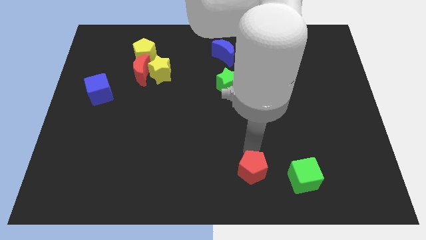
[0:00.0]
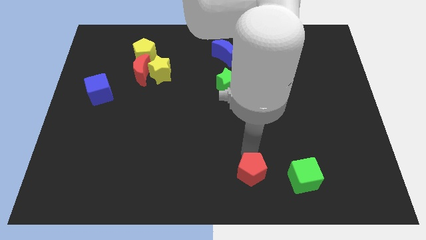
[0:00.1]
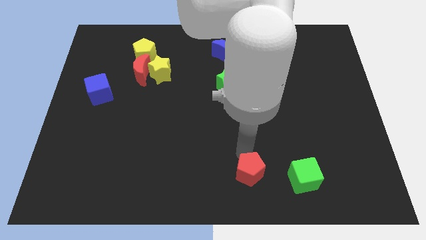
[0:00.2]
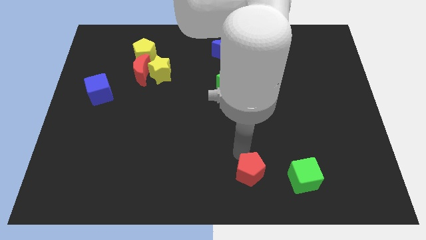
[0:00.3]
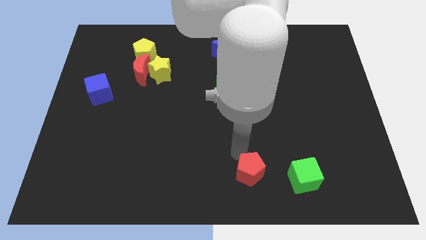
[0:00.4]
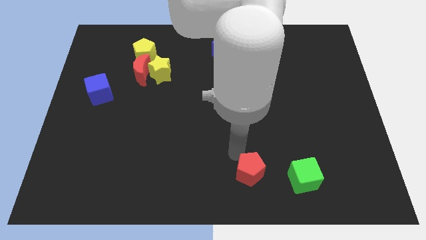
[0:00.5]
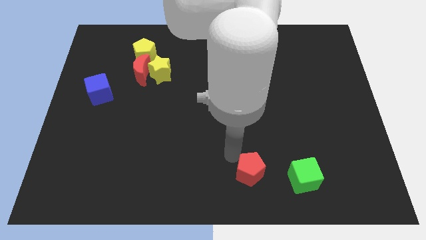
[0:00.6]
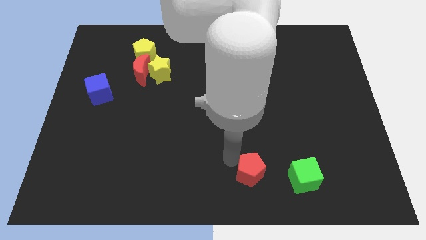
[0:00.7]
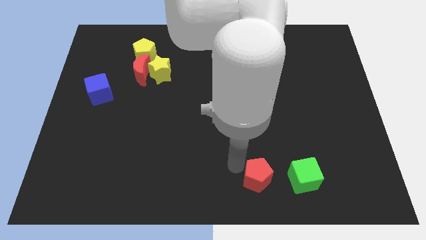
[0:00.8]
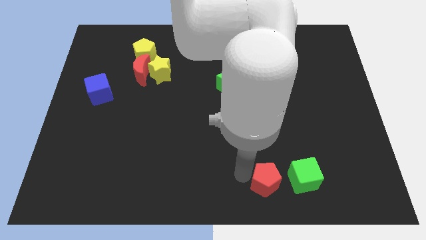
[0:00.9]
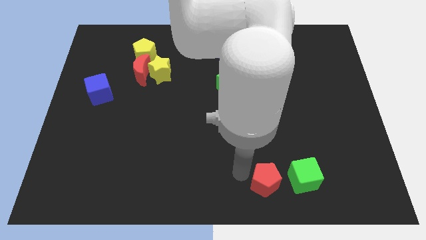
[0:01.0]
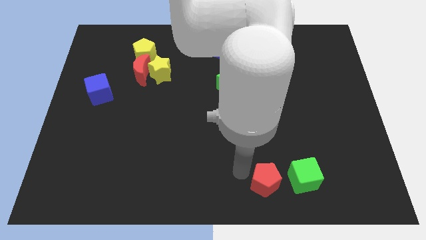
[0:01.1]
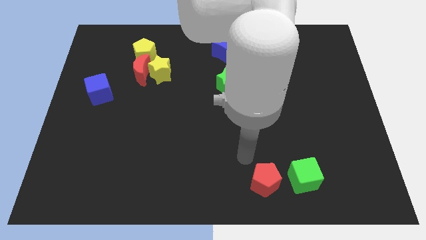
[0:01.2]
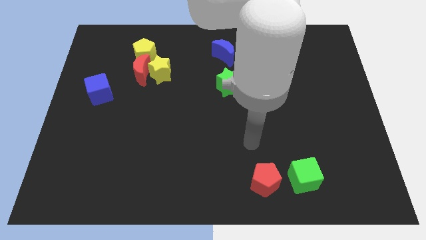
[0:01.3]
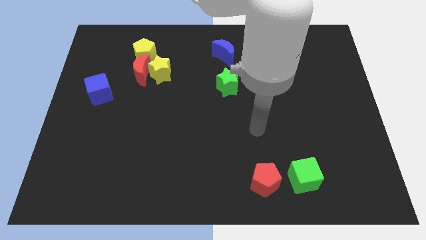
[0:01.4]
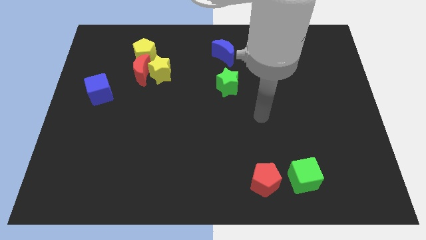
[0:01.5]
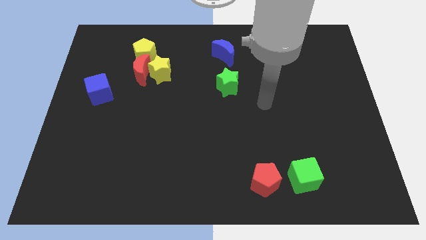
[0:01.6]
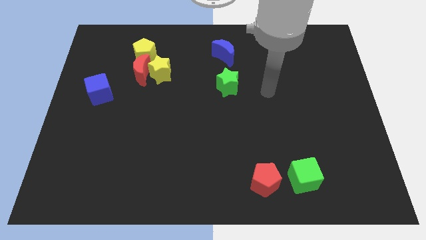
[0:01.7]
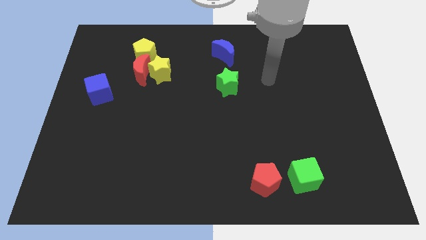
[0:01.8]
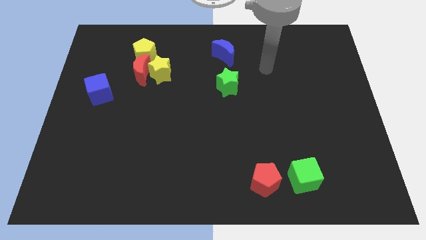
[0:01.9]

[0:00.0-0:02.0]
put the red pentagon left to the green cube

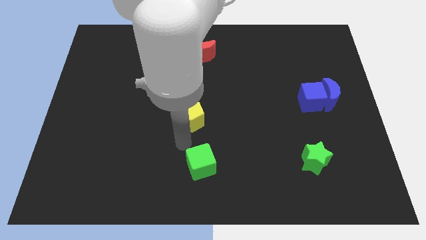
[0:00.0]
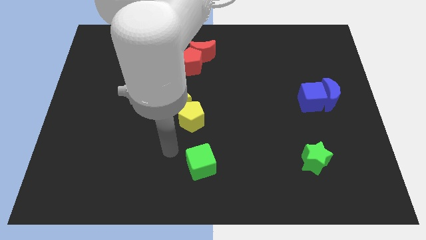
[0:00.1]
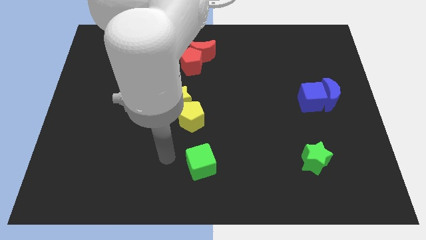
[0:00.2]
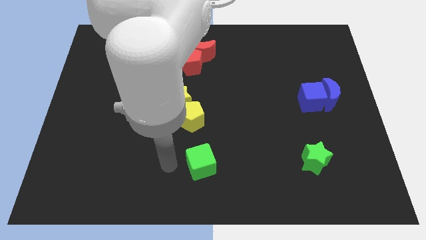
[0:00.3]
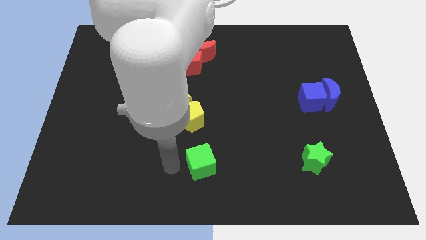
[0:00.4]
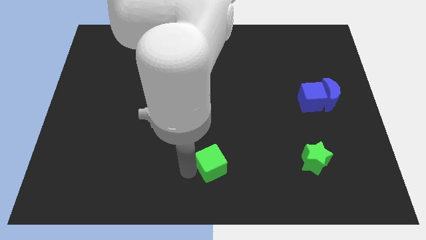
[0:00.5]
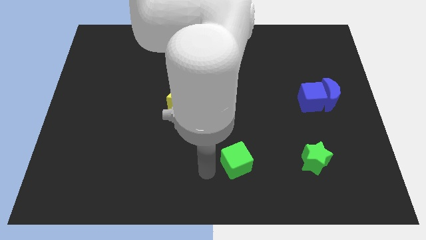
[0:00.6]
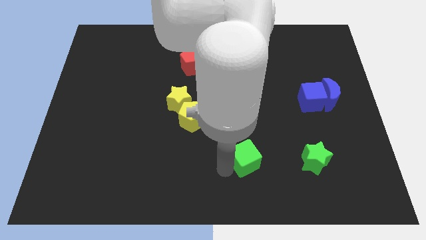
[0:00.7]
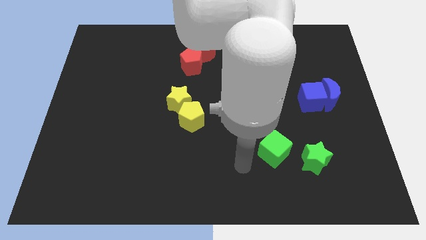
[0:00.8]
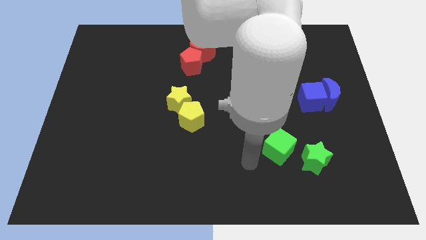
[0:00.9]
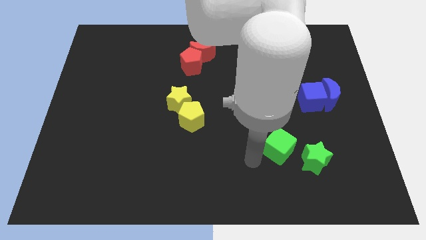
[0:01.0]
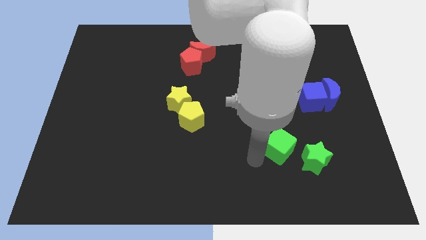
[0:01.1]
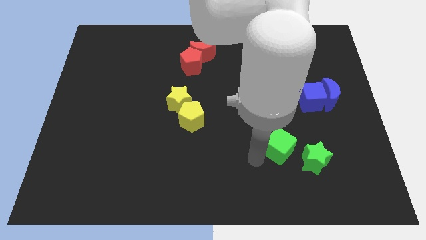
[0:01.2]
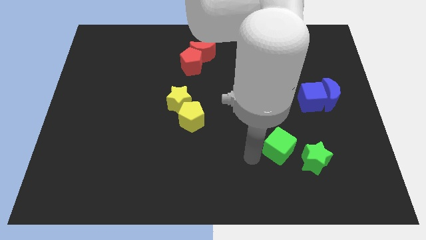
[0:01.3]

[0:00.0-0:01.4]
move the green cube close to the green star

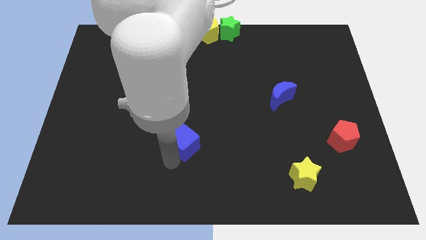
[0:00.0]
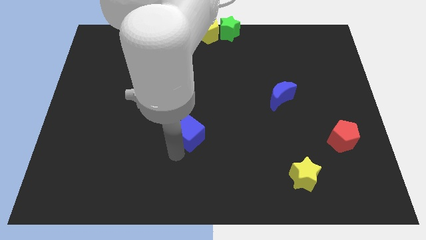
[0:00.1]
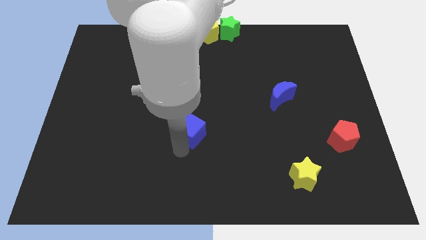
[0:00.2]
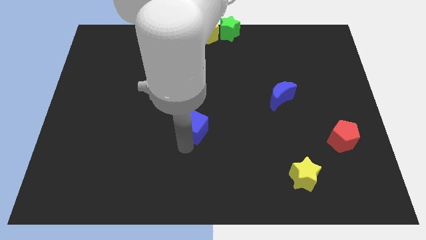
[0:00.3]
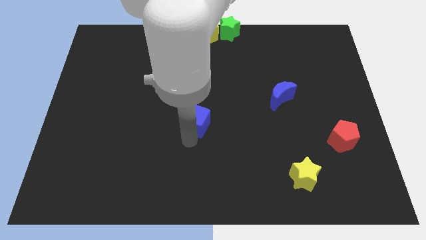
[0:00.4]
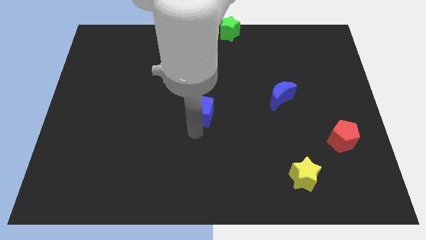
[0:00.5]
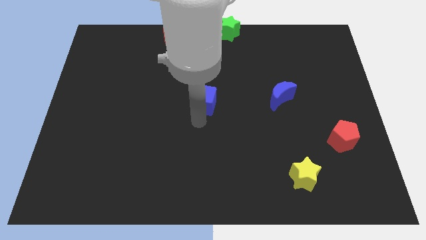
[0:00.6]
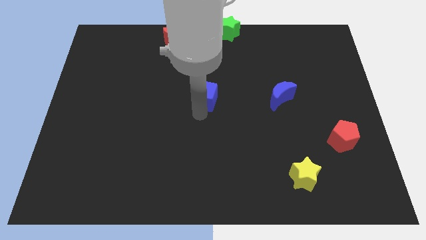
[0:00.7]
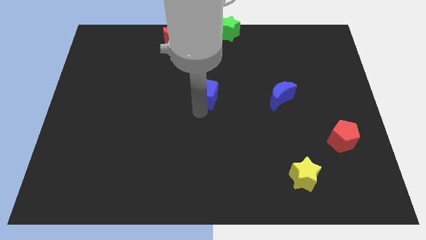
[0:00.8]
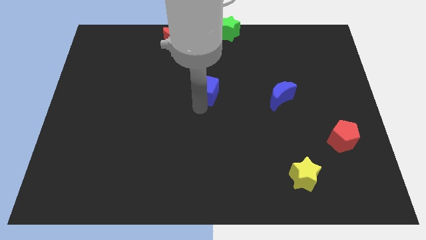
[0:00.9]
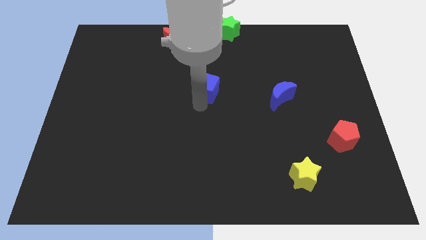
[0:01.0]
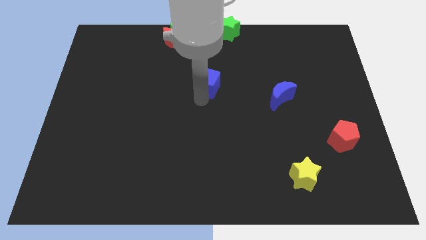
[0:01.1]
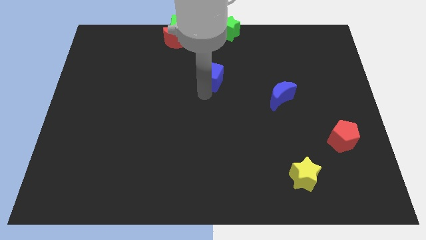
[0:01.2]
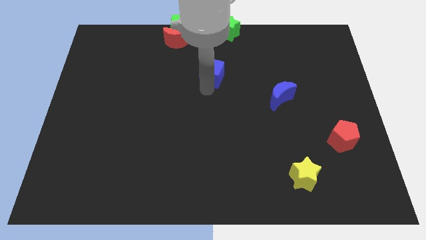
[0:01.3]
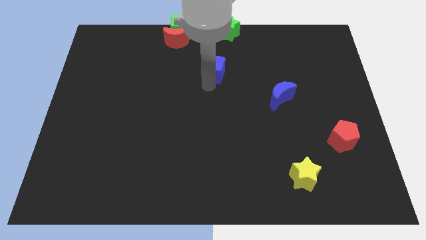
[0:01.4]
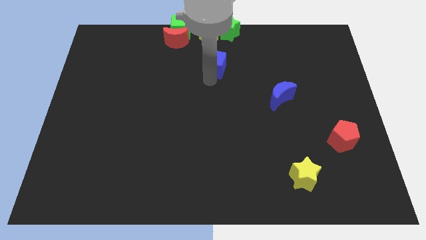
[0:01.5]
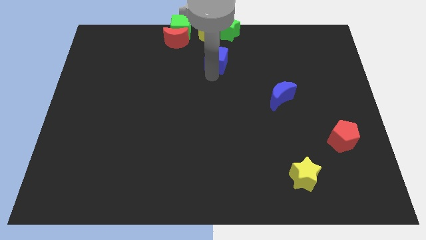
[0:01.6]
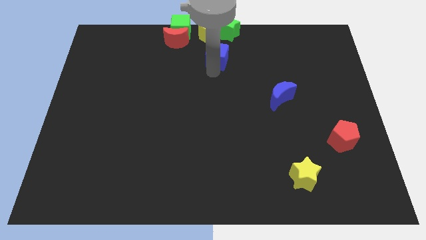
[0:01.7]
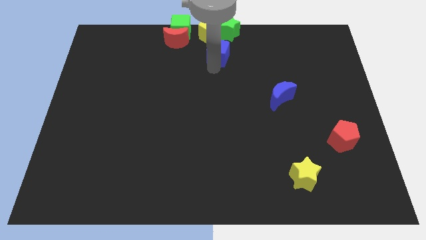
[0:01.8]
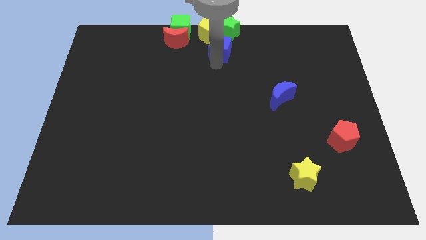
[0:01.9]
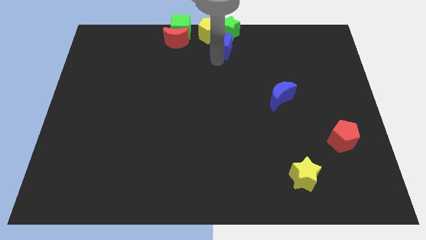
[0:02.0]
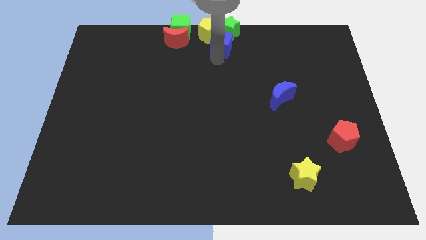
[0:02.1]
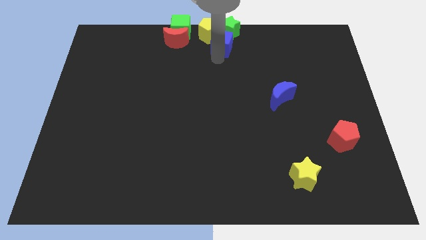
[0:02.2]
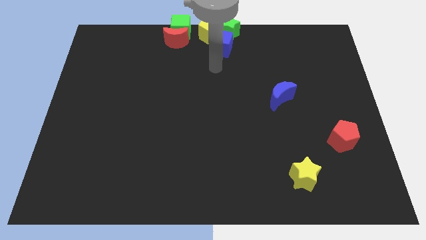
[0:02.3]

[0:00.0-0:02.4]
place the blue cube under the green star

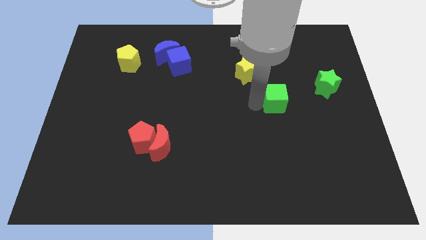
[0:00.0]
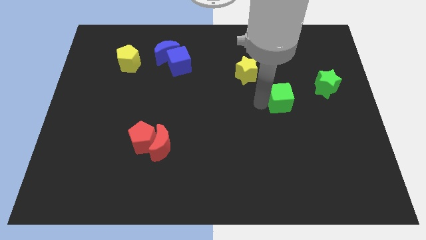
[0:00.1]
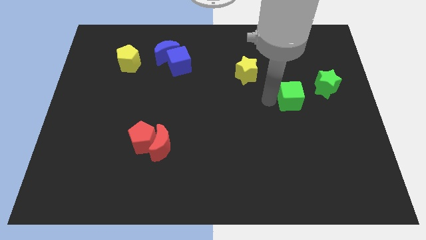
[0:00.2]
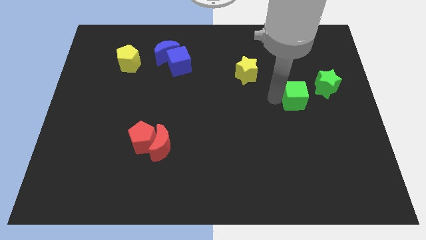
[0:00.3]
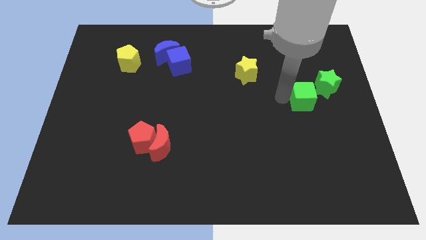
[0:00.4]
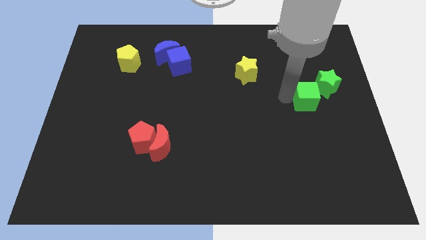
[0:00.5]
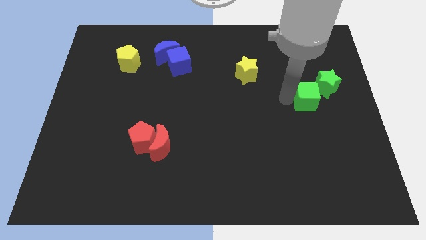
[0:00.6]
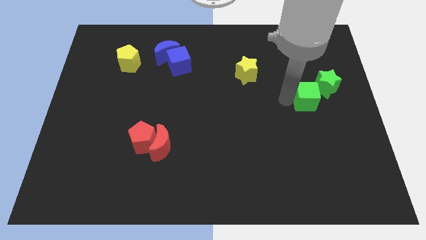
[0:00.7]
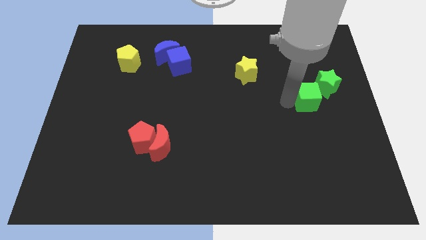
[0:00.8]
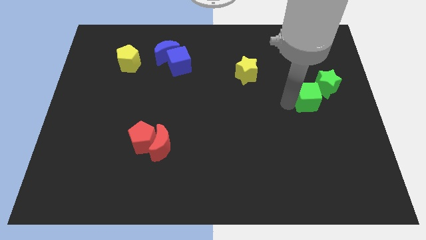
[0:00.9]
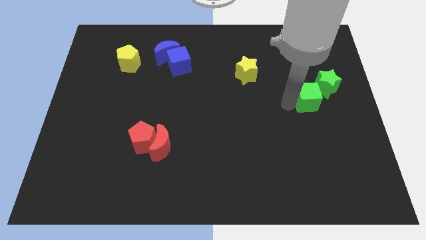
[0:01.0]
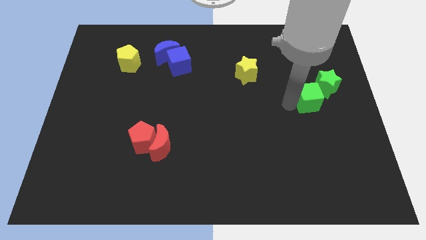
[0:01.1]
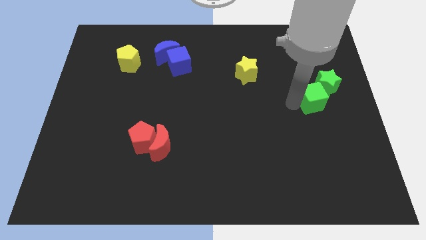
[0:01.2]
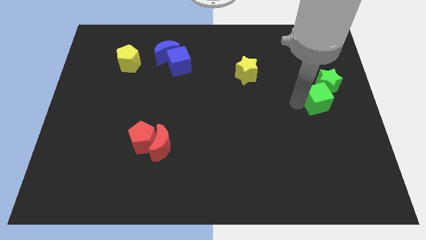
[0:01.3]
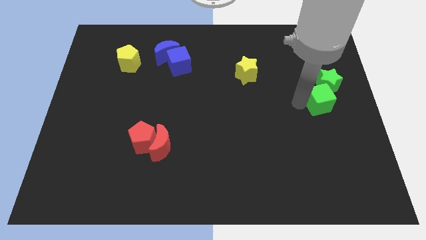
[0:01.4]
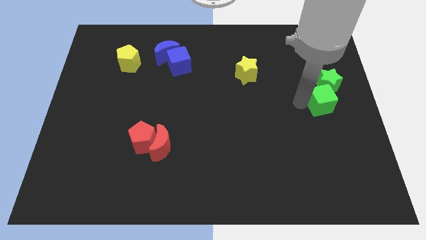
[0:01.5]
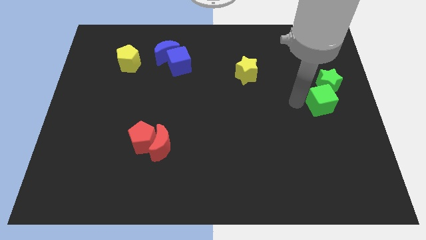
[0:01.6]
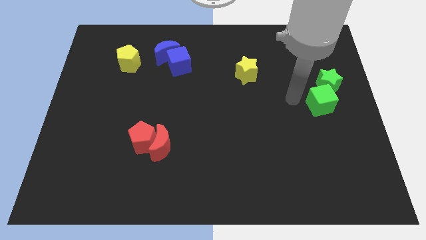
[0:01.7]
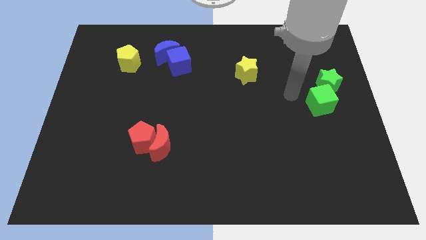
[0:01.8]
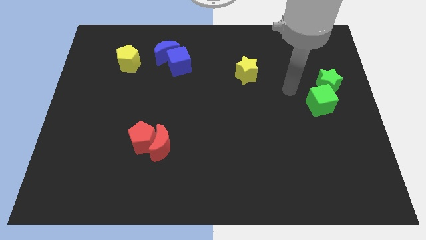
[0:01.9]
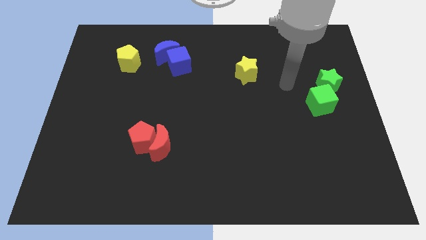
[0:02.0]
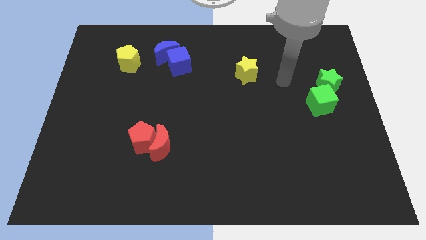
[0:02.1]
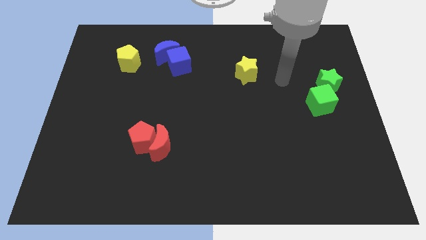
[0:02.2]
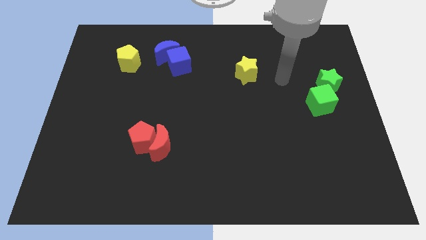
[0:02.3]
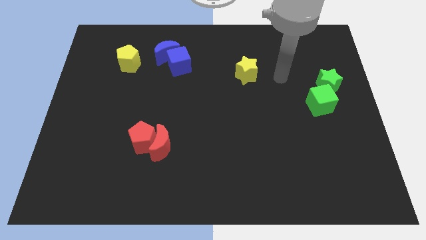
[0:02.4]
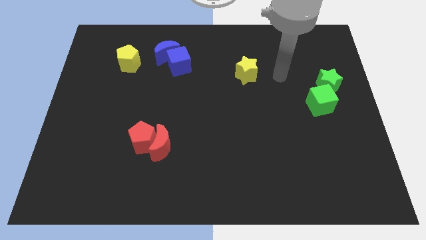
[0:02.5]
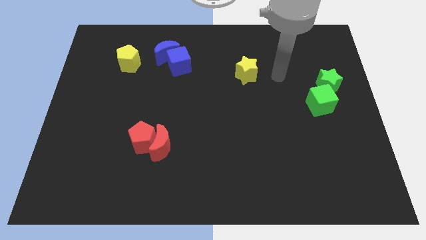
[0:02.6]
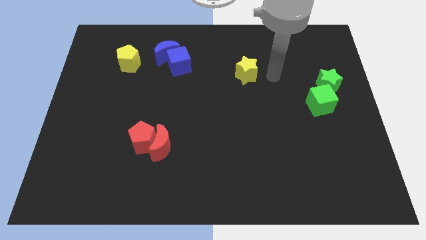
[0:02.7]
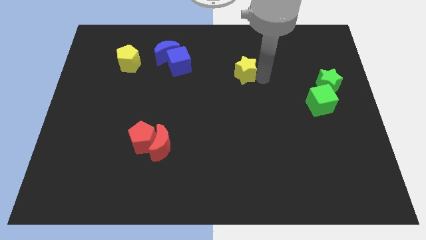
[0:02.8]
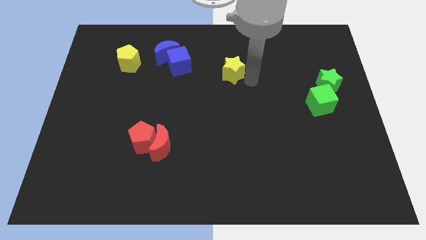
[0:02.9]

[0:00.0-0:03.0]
move the green cube below the green star

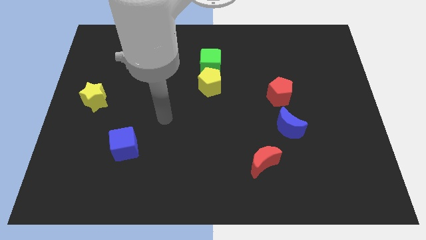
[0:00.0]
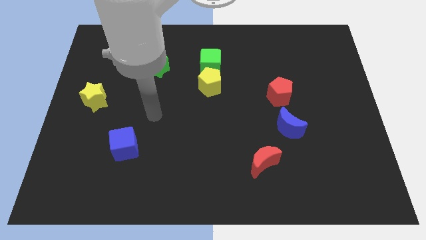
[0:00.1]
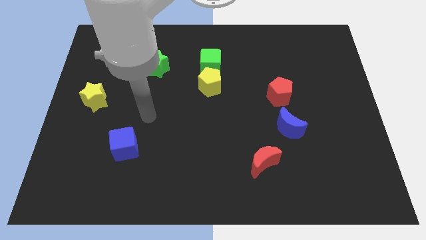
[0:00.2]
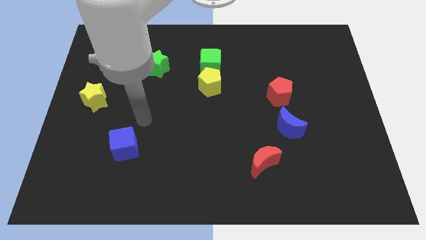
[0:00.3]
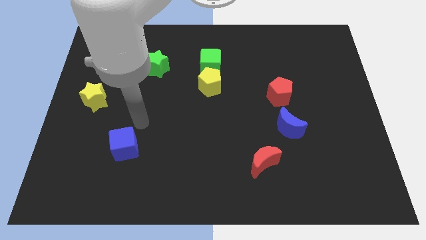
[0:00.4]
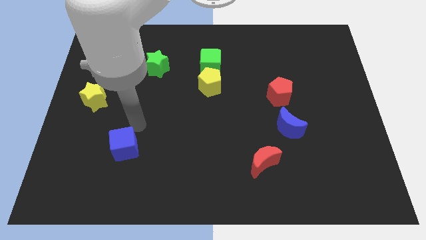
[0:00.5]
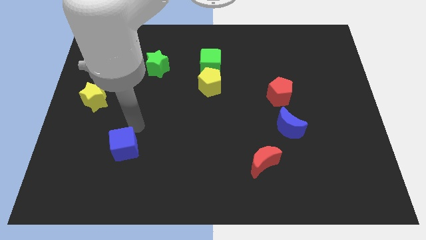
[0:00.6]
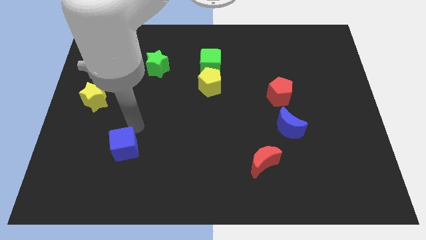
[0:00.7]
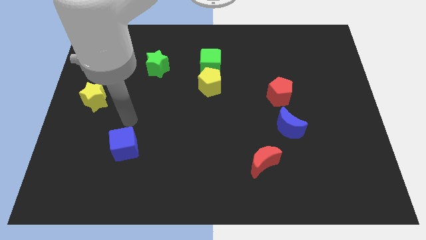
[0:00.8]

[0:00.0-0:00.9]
go near to the blue cube
